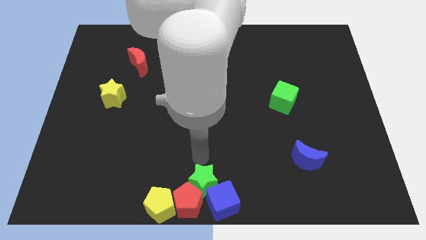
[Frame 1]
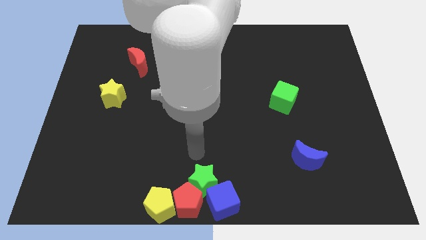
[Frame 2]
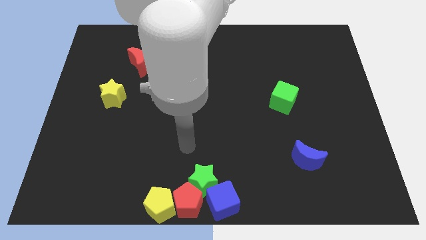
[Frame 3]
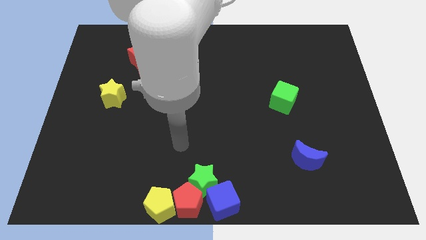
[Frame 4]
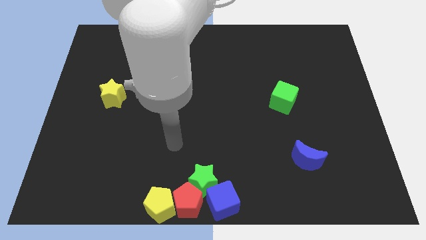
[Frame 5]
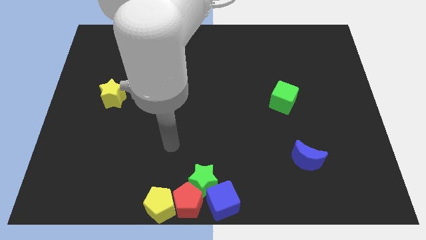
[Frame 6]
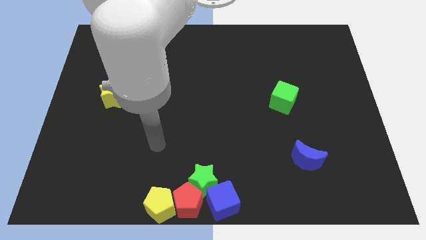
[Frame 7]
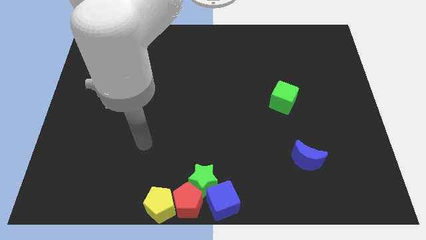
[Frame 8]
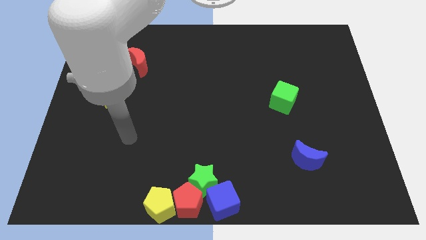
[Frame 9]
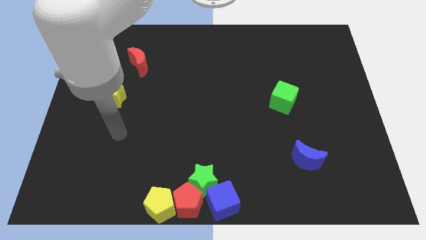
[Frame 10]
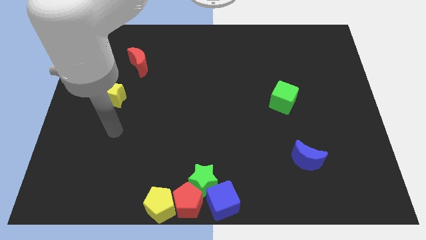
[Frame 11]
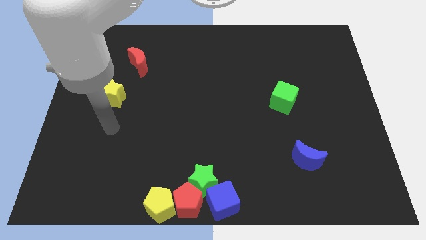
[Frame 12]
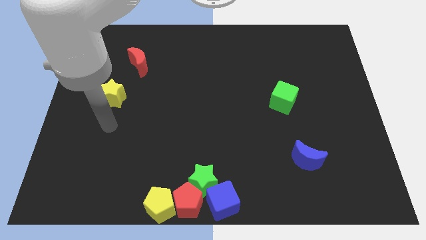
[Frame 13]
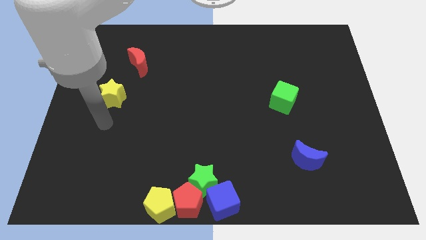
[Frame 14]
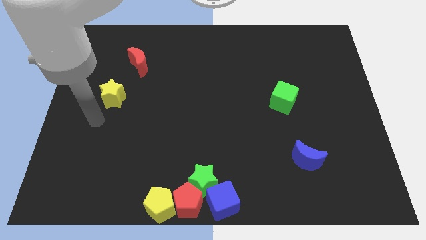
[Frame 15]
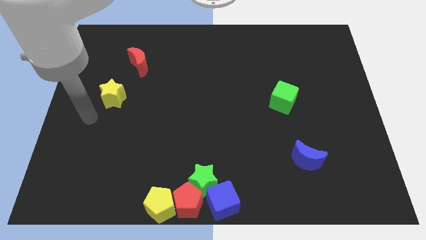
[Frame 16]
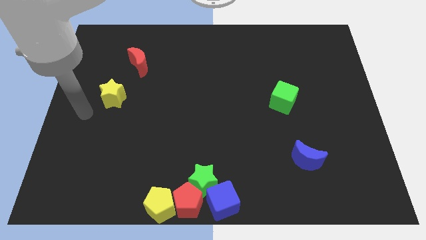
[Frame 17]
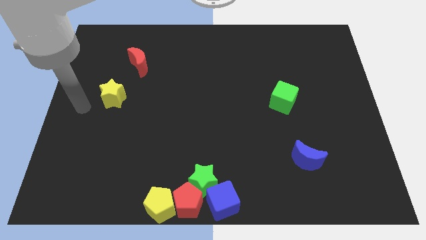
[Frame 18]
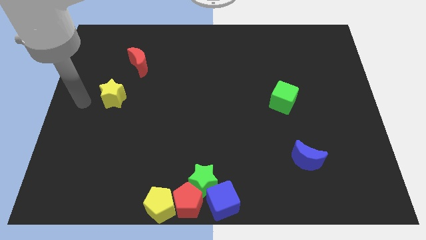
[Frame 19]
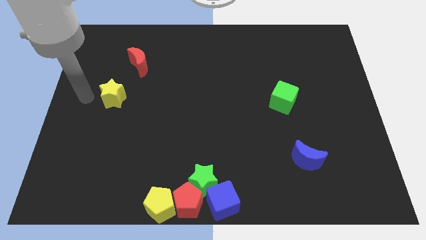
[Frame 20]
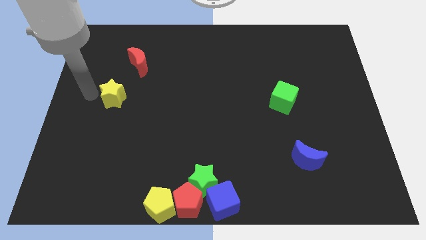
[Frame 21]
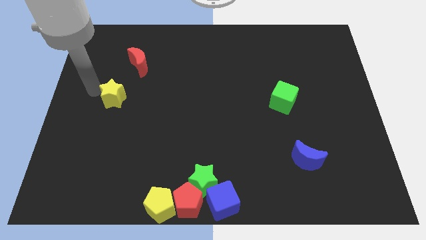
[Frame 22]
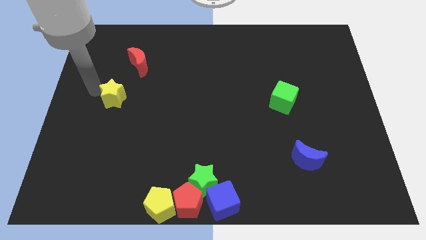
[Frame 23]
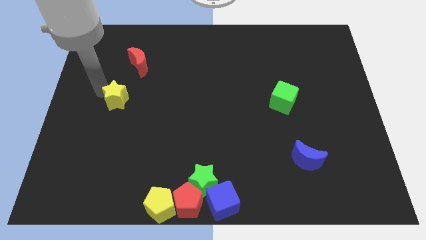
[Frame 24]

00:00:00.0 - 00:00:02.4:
tap the yellow star

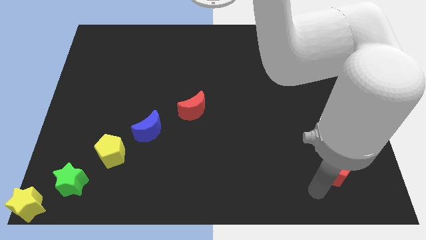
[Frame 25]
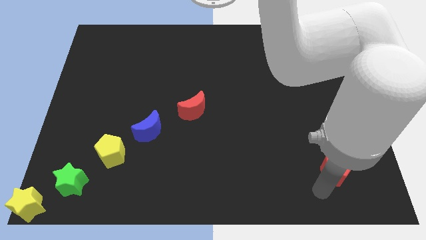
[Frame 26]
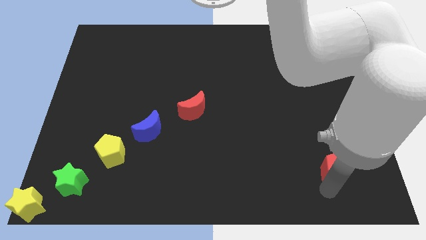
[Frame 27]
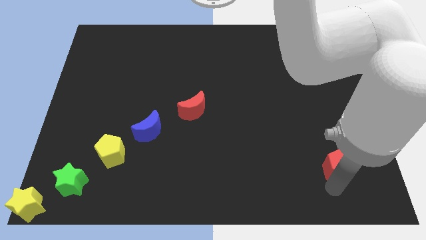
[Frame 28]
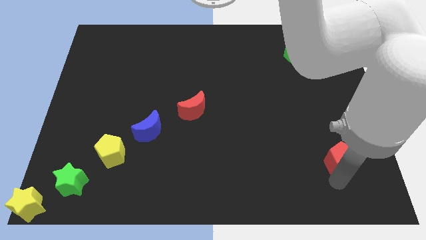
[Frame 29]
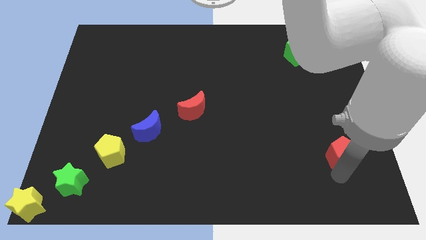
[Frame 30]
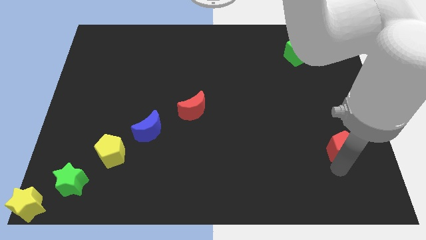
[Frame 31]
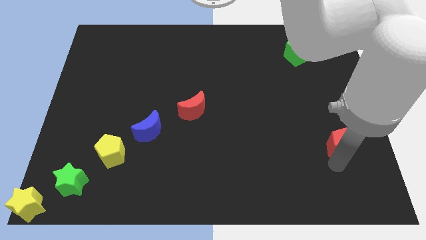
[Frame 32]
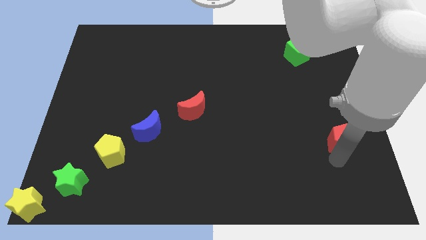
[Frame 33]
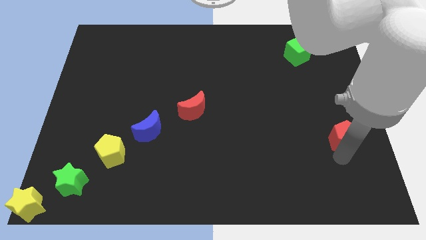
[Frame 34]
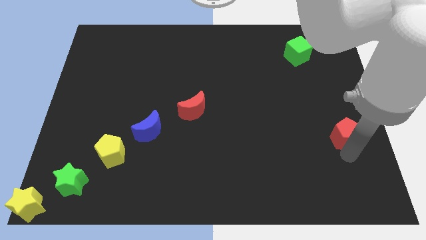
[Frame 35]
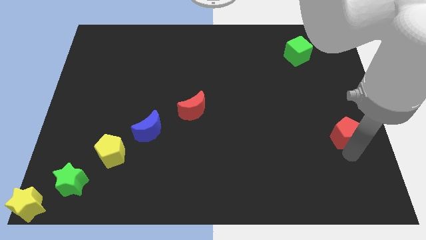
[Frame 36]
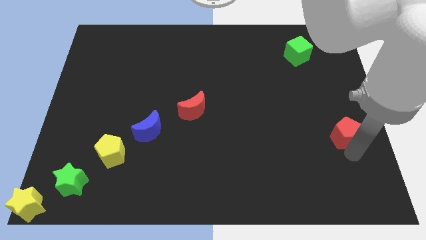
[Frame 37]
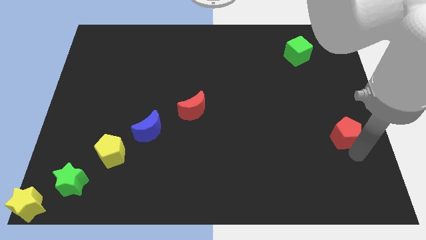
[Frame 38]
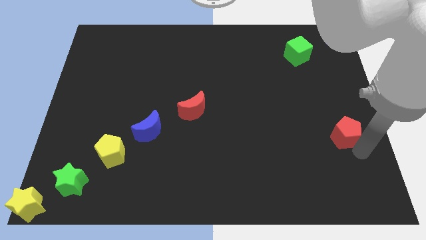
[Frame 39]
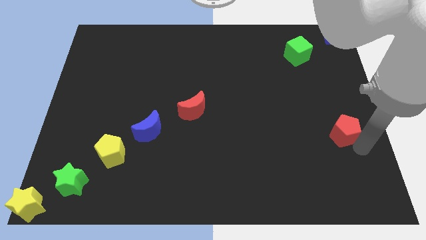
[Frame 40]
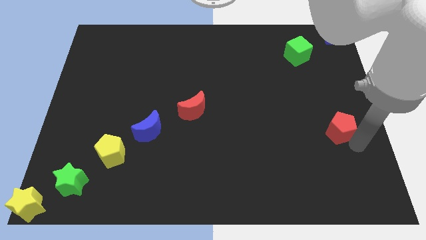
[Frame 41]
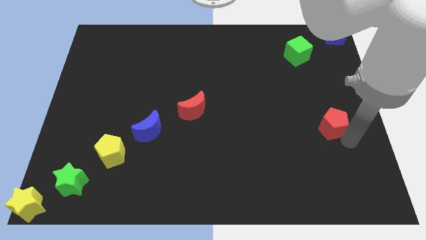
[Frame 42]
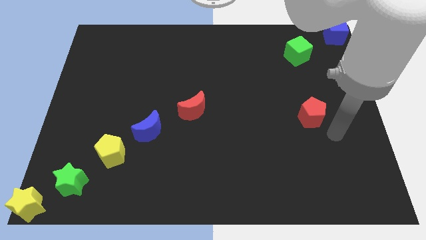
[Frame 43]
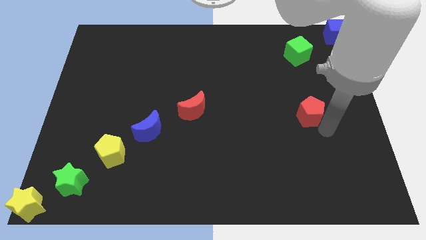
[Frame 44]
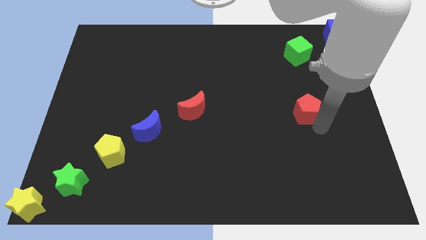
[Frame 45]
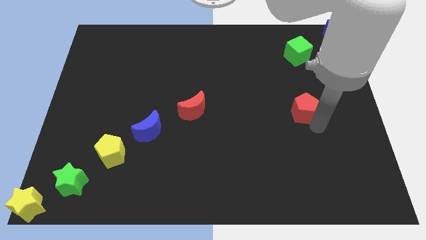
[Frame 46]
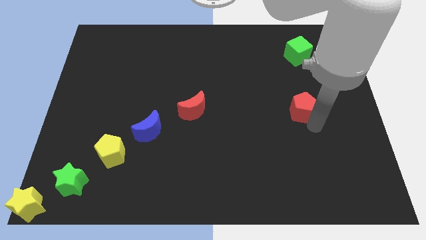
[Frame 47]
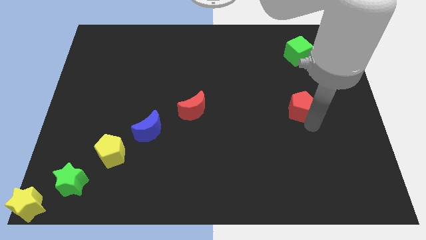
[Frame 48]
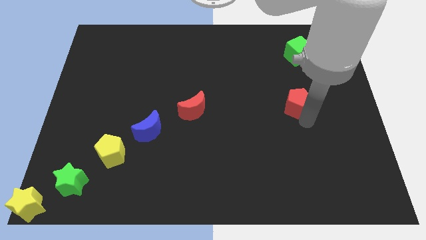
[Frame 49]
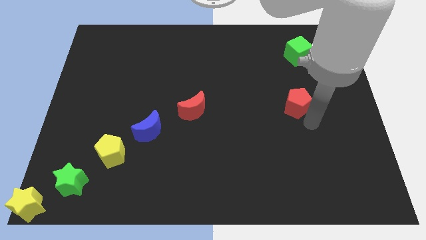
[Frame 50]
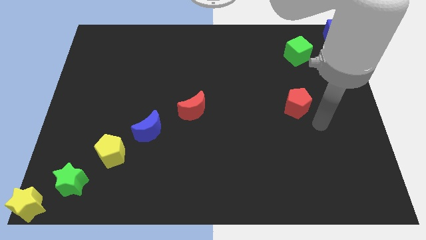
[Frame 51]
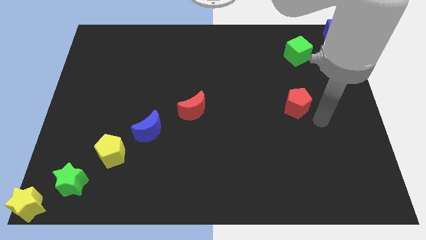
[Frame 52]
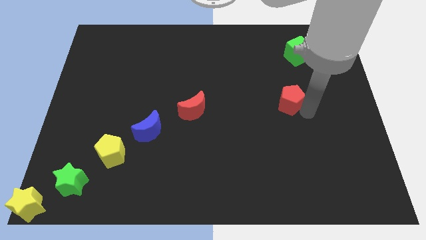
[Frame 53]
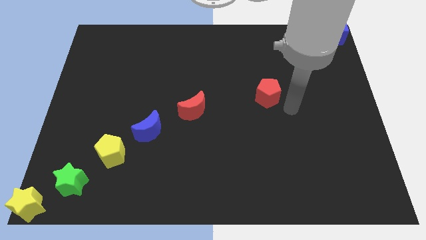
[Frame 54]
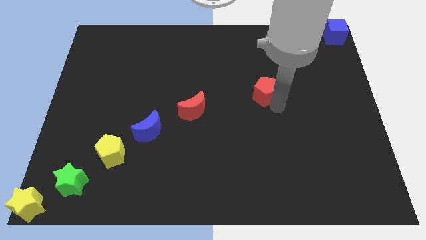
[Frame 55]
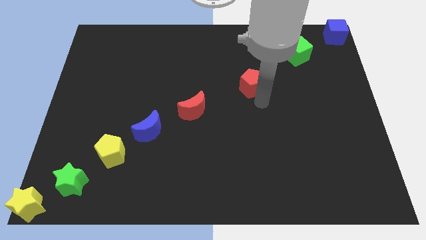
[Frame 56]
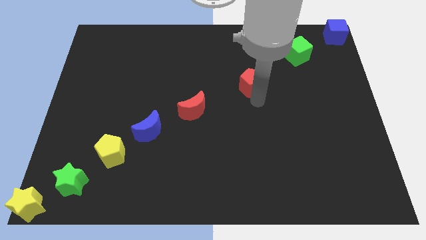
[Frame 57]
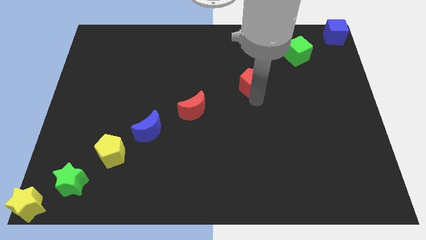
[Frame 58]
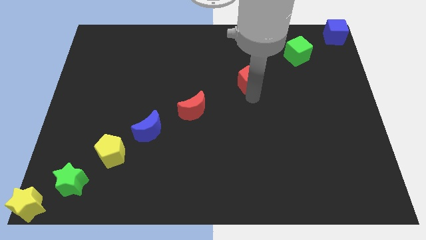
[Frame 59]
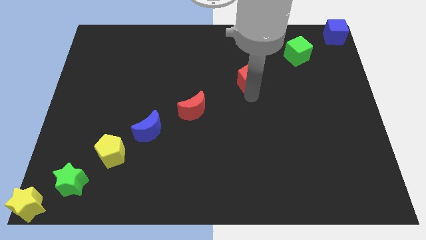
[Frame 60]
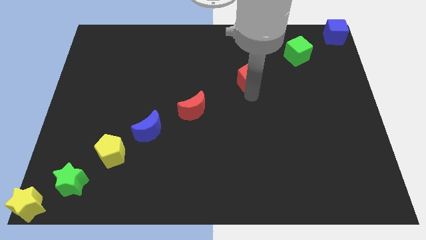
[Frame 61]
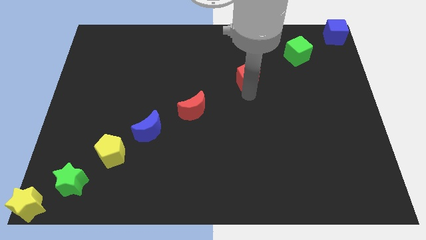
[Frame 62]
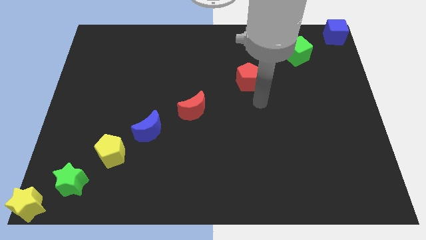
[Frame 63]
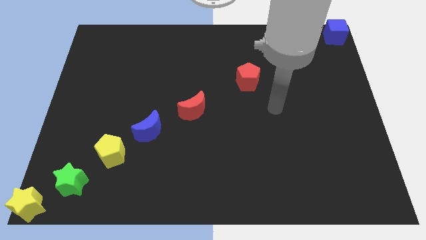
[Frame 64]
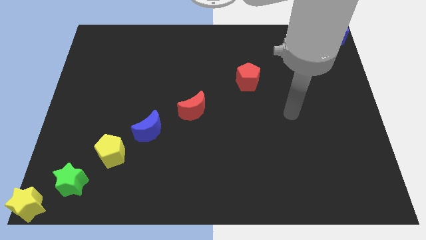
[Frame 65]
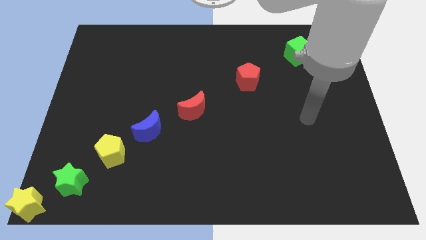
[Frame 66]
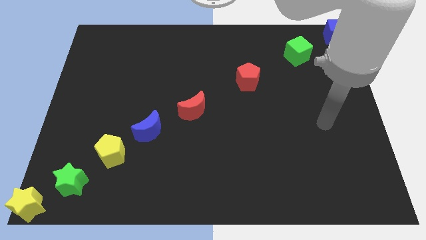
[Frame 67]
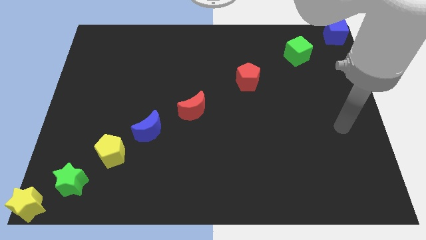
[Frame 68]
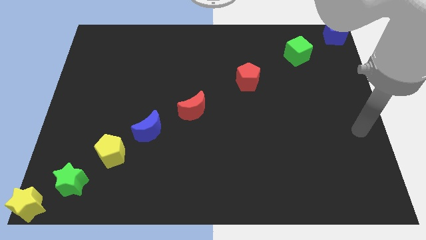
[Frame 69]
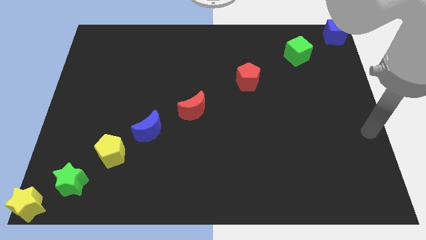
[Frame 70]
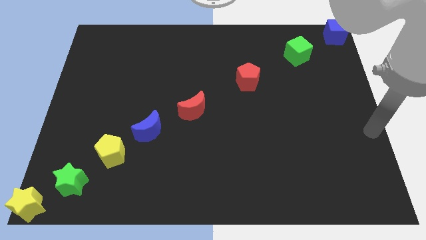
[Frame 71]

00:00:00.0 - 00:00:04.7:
move the red pentagon in between the green cube and the red crescent

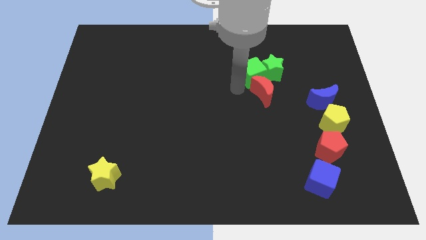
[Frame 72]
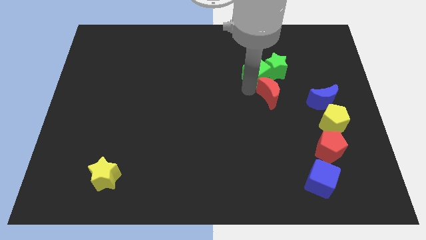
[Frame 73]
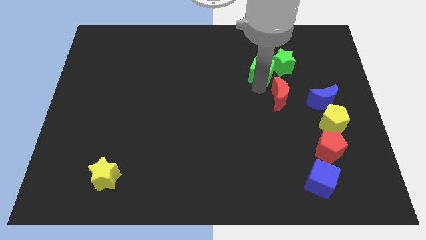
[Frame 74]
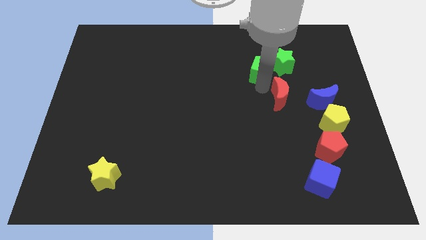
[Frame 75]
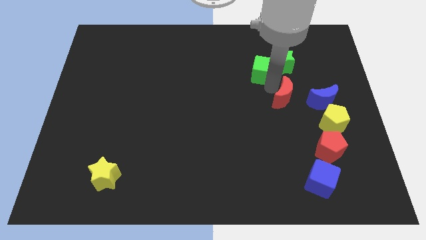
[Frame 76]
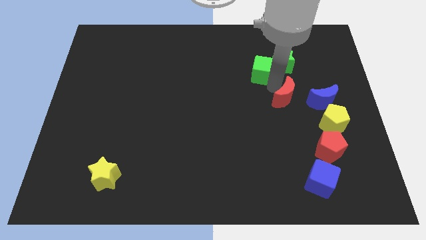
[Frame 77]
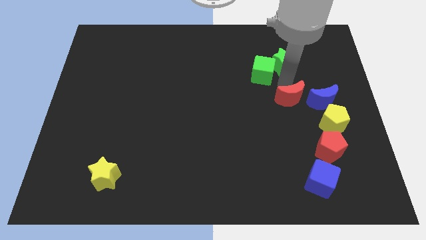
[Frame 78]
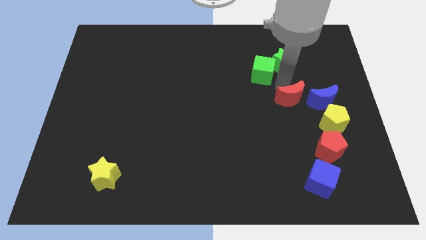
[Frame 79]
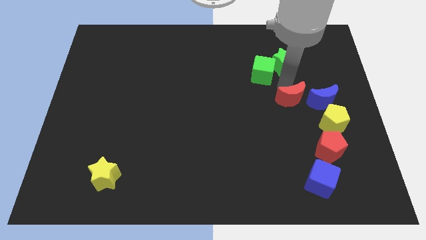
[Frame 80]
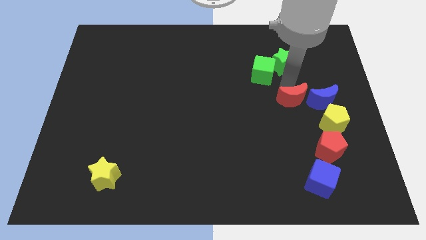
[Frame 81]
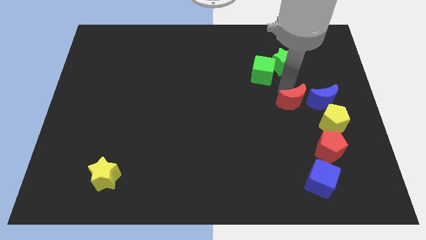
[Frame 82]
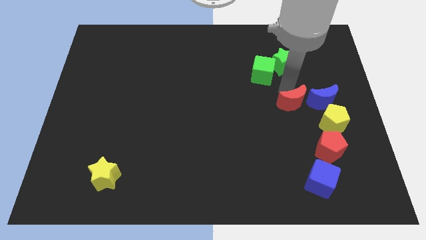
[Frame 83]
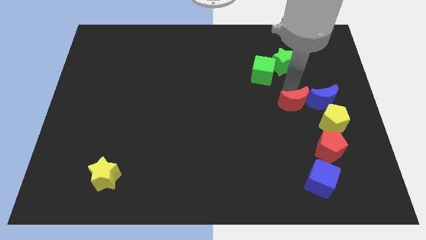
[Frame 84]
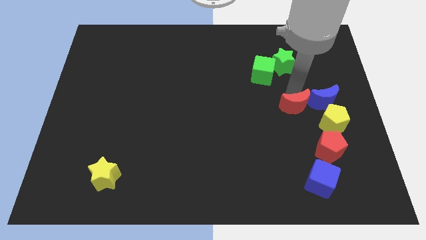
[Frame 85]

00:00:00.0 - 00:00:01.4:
separate green blocks and the red moon

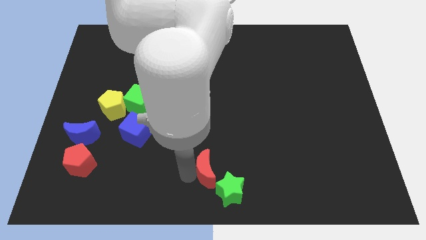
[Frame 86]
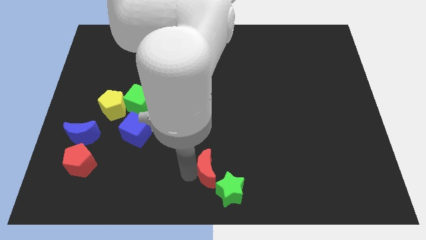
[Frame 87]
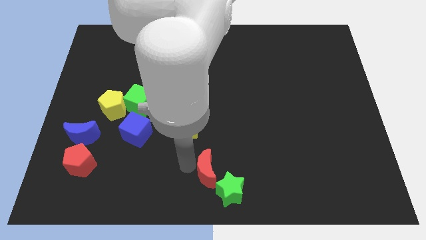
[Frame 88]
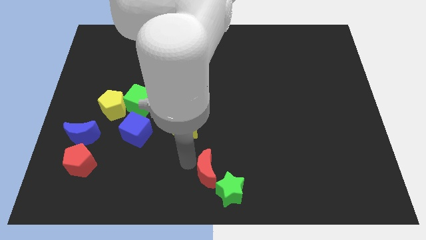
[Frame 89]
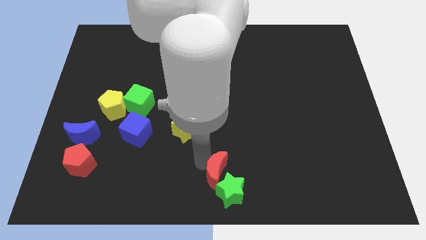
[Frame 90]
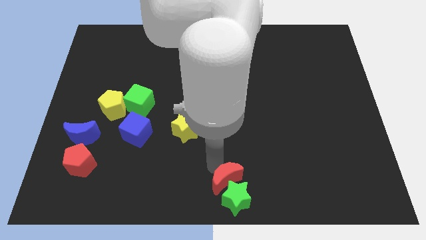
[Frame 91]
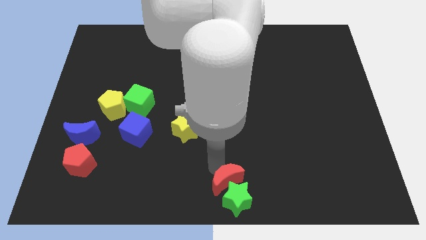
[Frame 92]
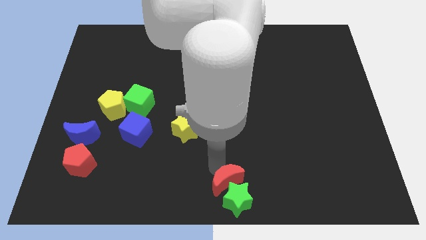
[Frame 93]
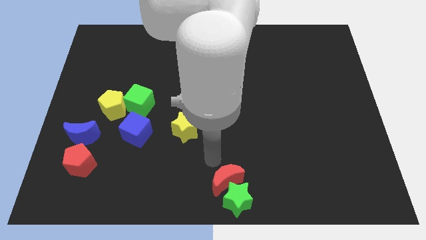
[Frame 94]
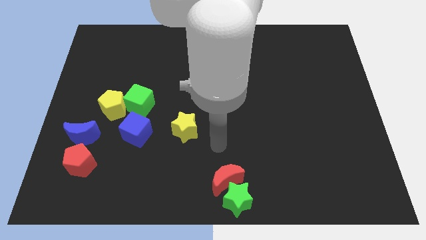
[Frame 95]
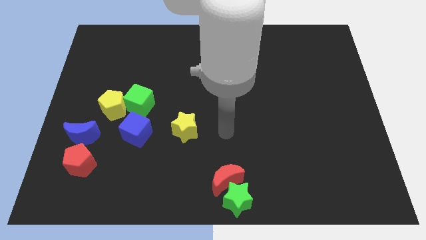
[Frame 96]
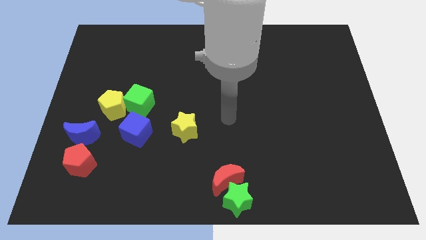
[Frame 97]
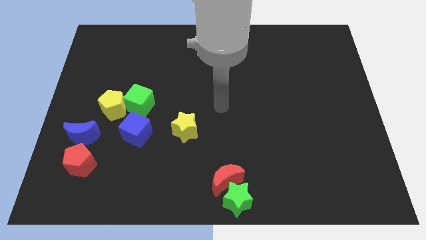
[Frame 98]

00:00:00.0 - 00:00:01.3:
place red crescent near green star
